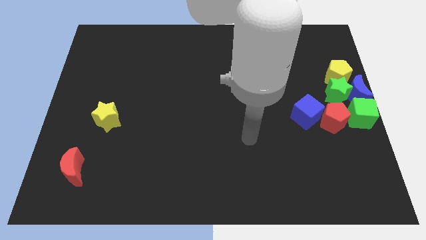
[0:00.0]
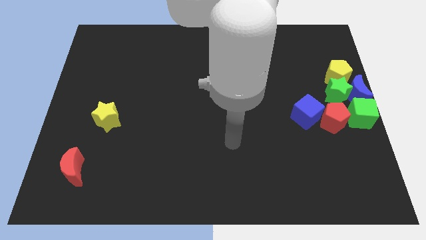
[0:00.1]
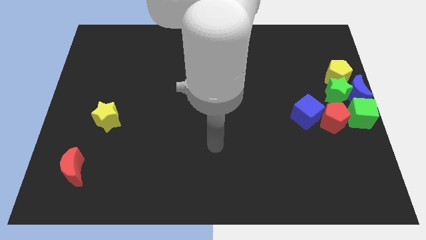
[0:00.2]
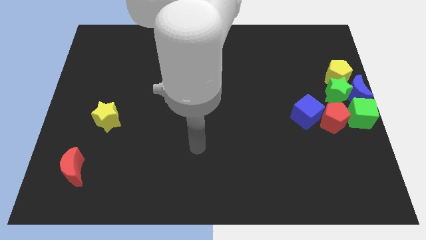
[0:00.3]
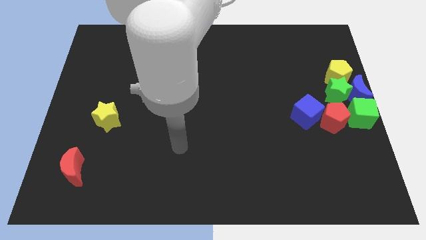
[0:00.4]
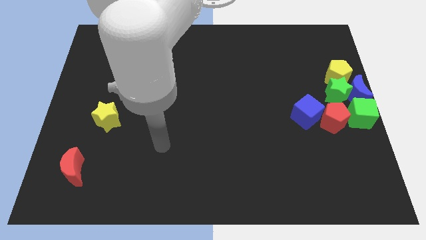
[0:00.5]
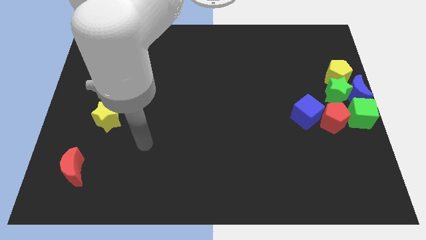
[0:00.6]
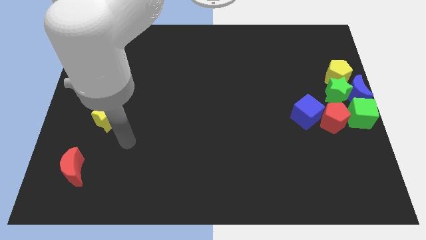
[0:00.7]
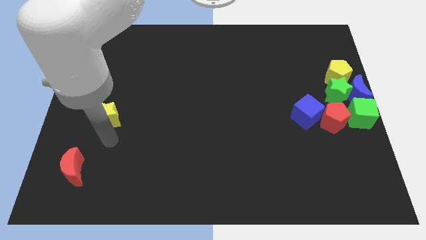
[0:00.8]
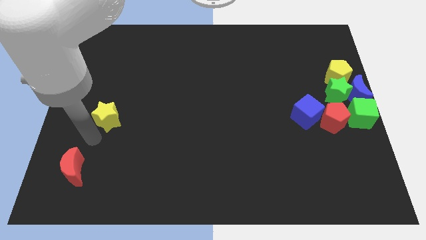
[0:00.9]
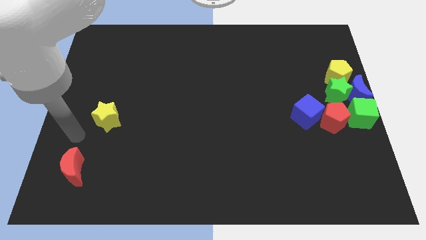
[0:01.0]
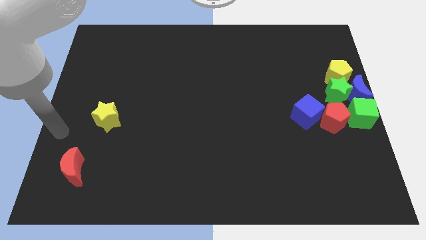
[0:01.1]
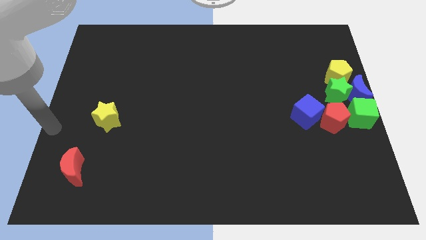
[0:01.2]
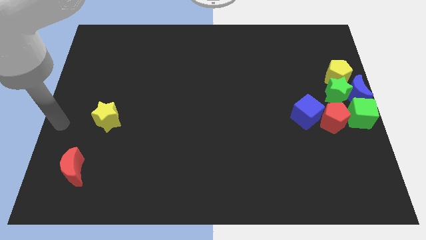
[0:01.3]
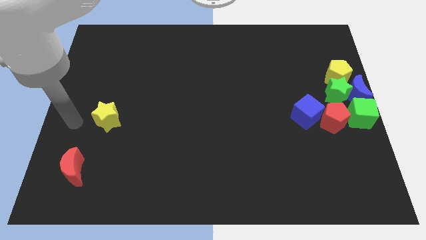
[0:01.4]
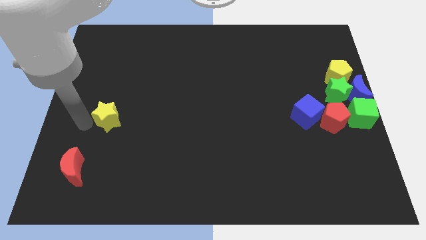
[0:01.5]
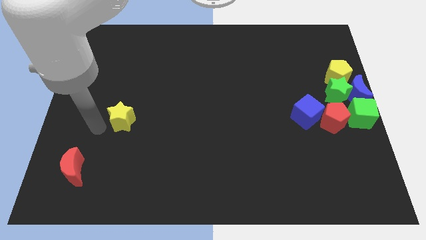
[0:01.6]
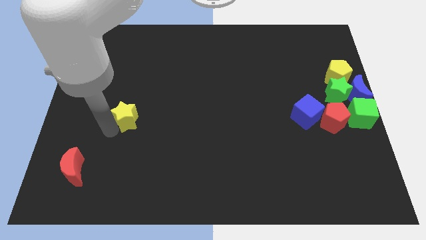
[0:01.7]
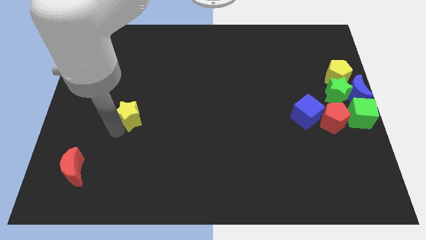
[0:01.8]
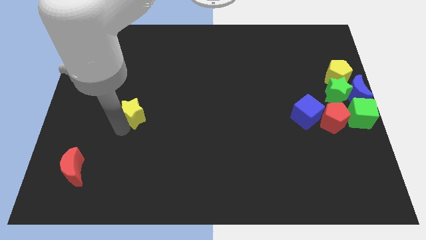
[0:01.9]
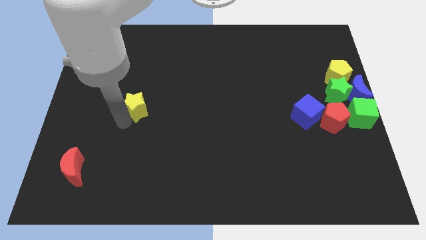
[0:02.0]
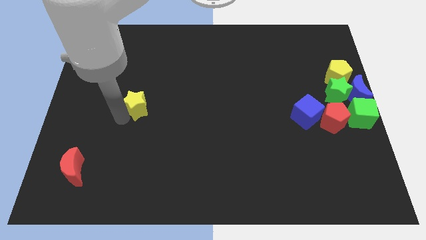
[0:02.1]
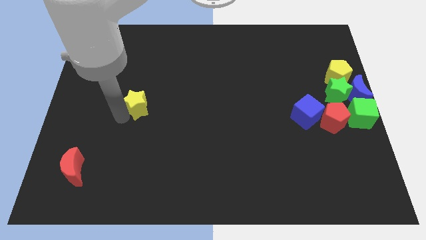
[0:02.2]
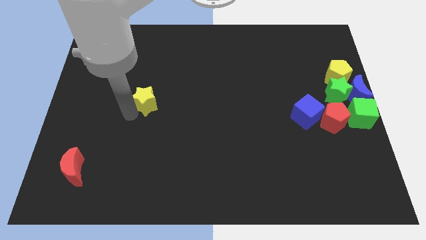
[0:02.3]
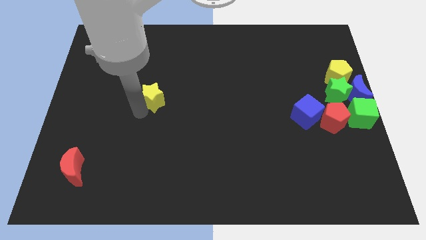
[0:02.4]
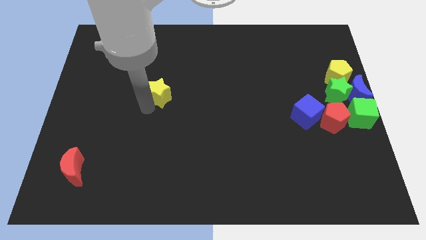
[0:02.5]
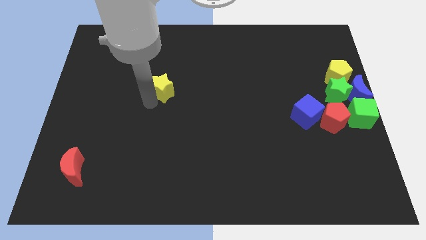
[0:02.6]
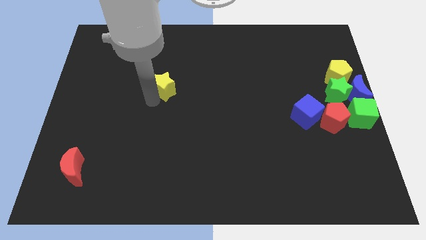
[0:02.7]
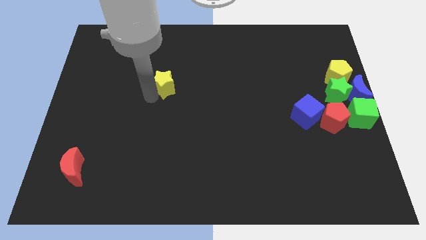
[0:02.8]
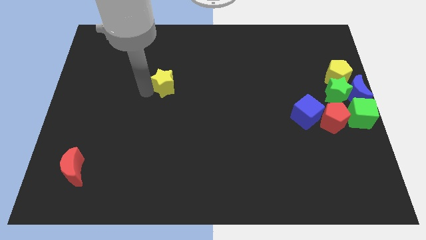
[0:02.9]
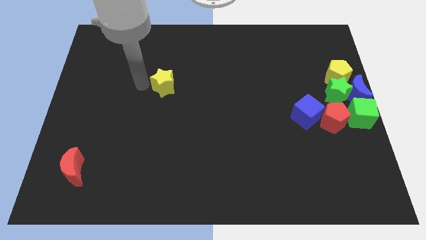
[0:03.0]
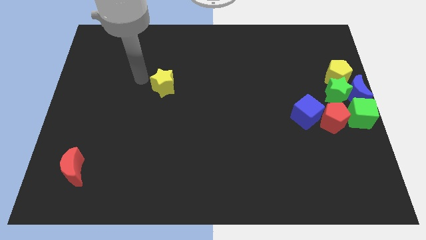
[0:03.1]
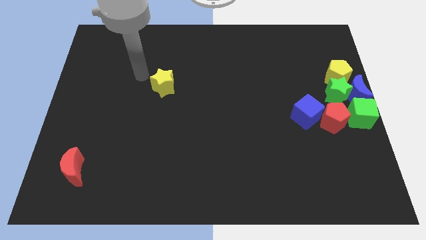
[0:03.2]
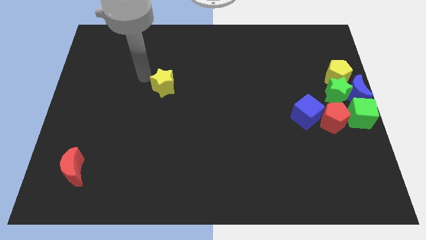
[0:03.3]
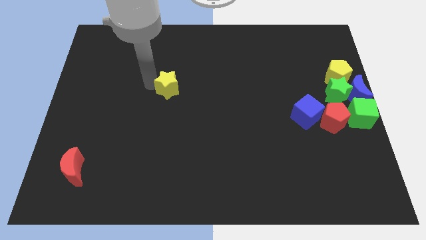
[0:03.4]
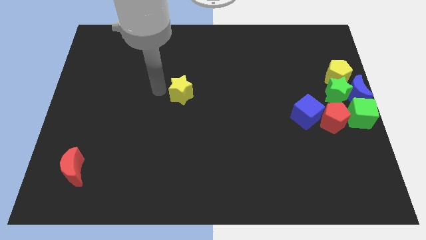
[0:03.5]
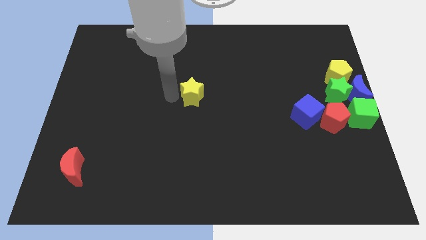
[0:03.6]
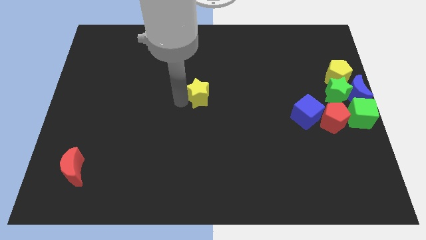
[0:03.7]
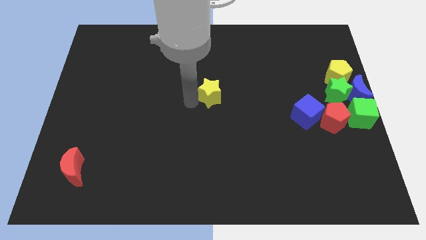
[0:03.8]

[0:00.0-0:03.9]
move the yellow star to the center

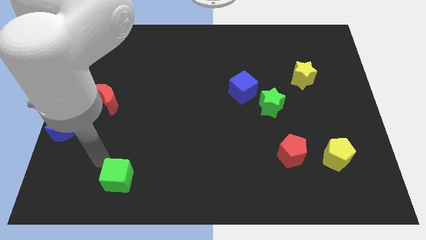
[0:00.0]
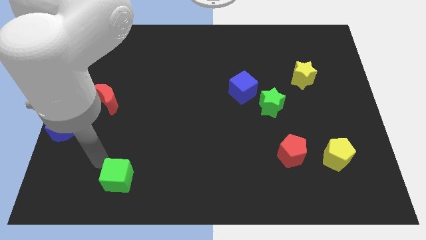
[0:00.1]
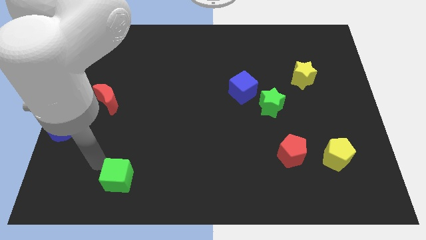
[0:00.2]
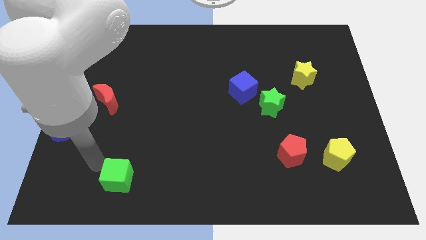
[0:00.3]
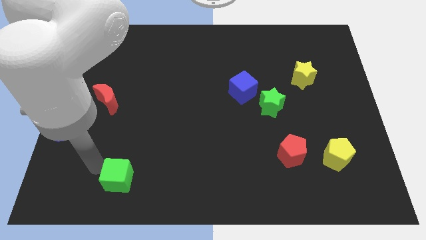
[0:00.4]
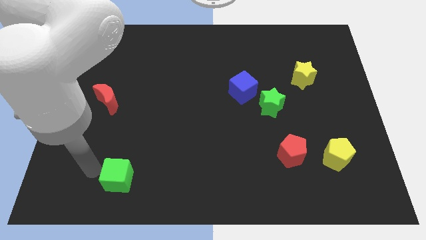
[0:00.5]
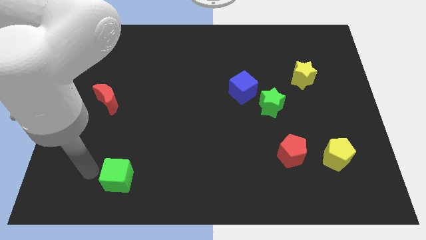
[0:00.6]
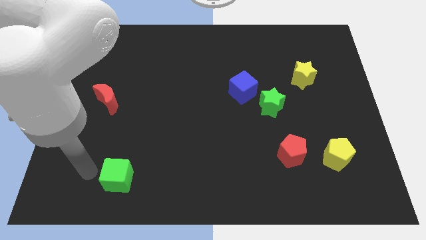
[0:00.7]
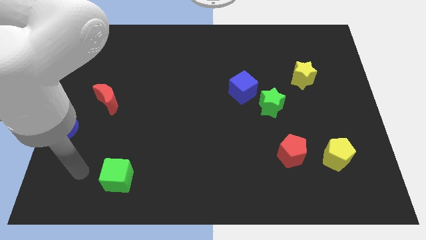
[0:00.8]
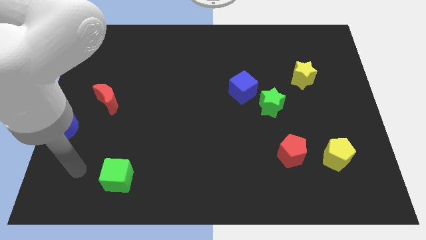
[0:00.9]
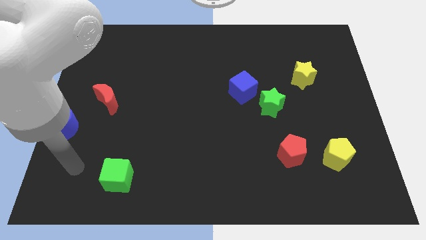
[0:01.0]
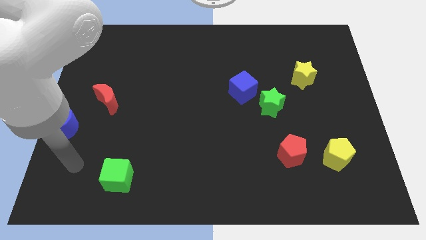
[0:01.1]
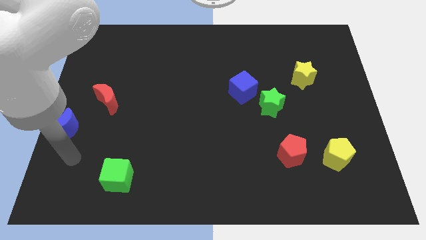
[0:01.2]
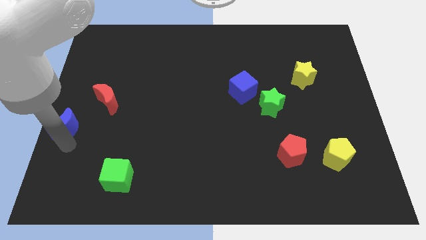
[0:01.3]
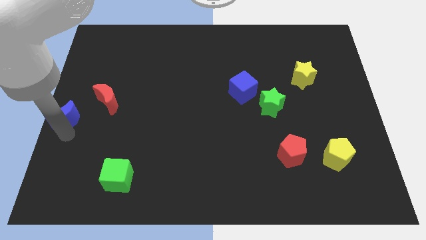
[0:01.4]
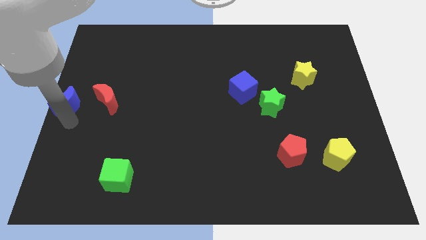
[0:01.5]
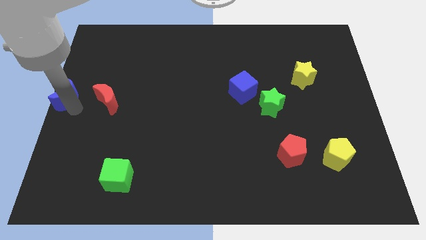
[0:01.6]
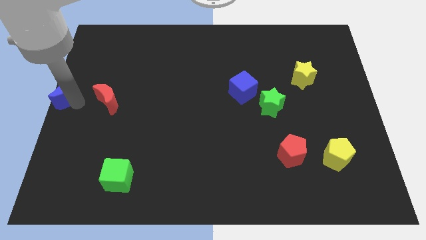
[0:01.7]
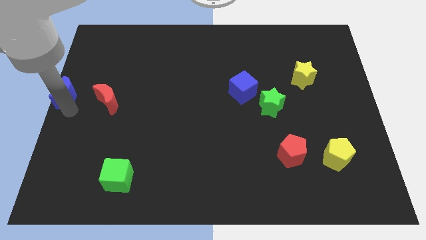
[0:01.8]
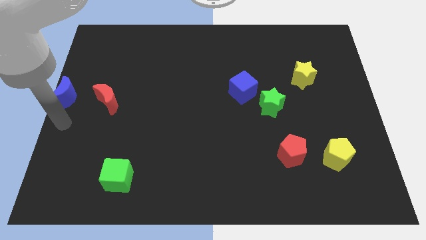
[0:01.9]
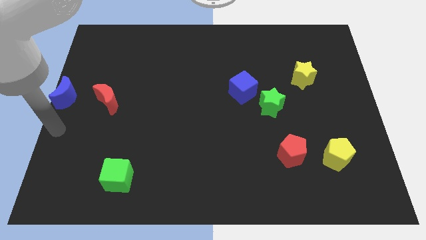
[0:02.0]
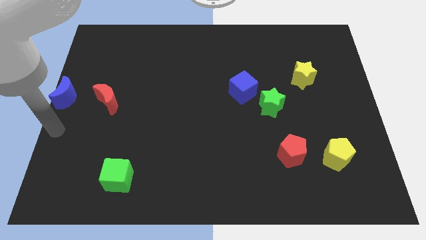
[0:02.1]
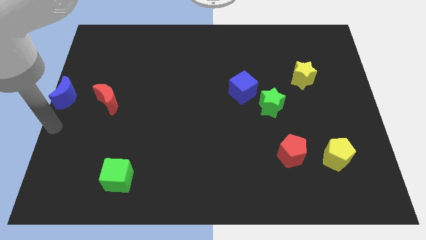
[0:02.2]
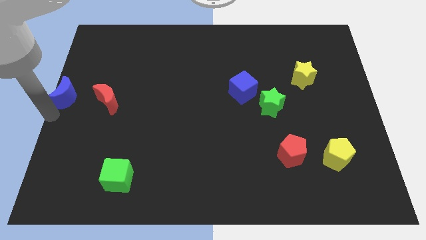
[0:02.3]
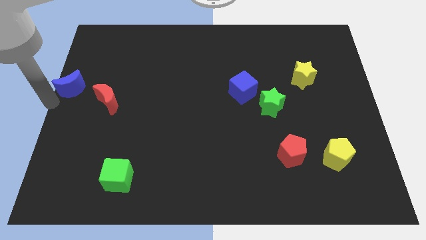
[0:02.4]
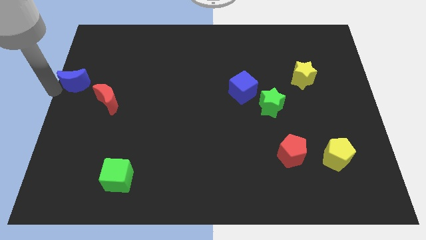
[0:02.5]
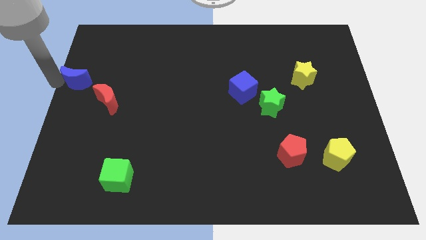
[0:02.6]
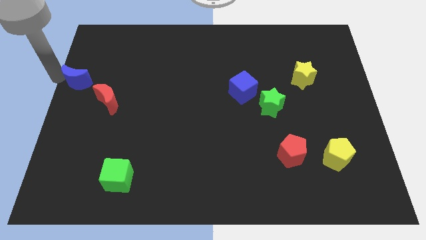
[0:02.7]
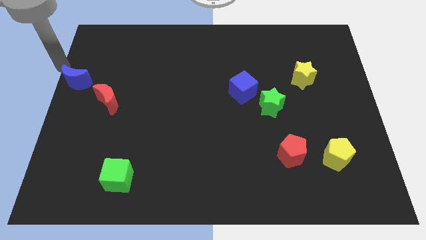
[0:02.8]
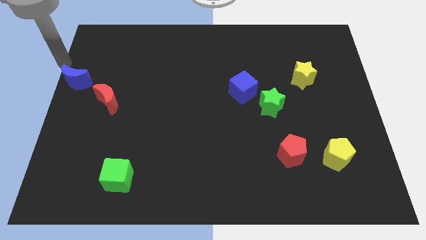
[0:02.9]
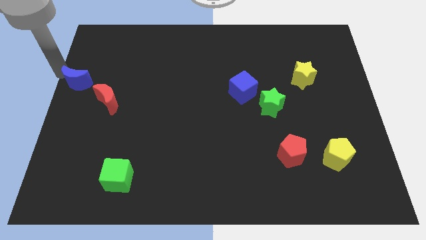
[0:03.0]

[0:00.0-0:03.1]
place blue moon to the top left of red moon

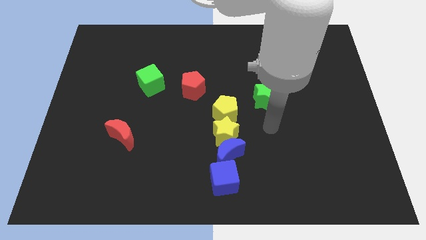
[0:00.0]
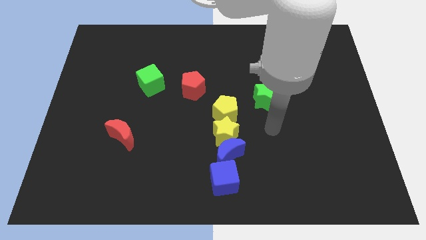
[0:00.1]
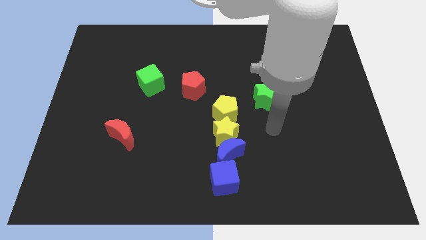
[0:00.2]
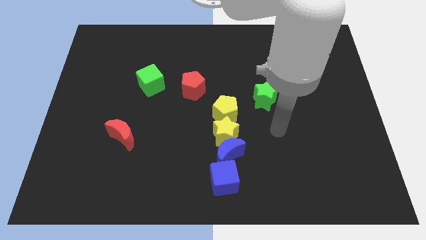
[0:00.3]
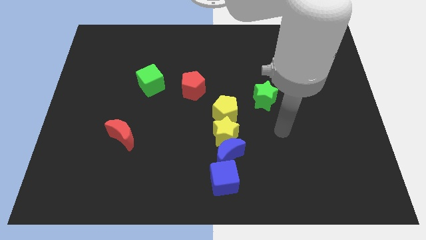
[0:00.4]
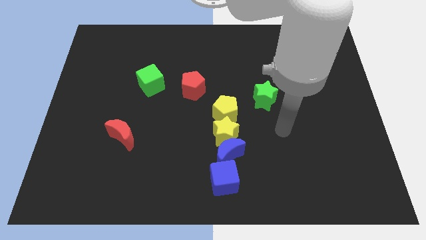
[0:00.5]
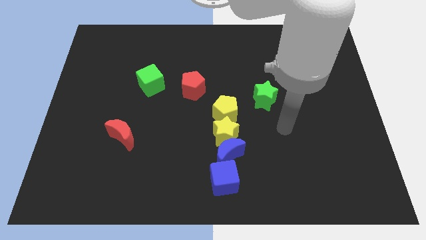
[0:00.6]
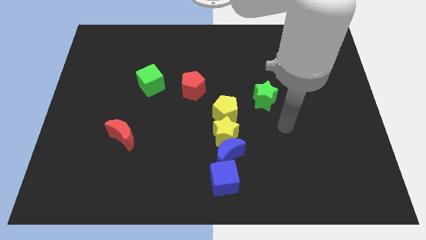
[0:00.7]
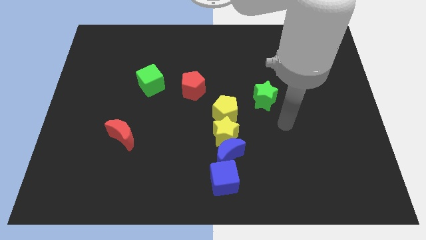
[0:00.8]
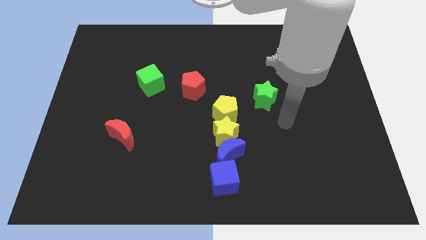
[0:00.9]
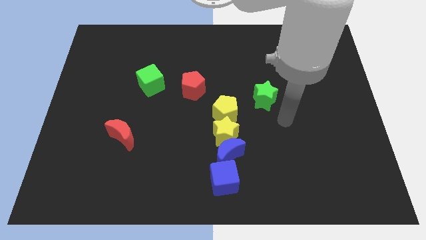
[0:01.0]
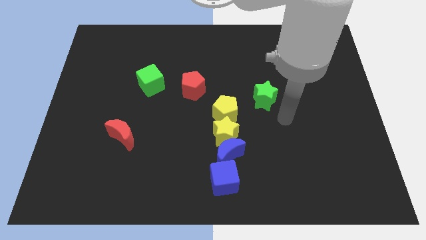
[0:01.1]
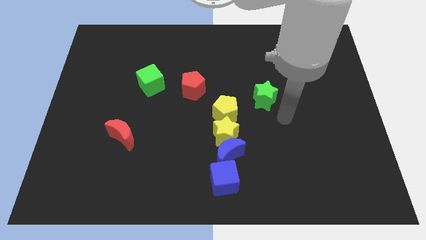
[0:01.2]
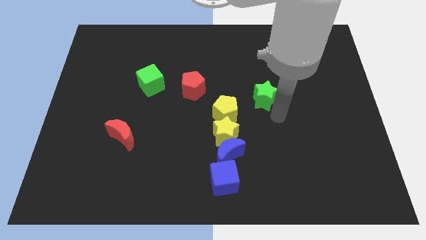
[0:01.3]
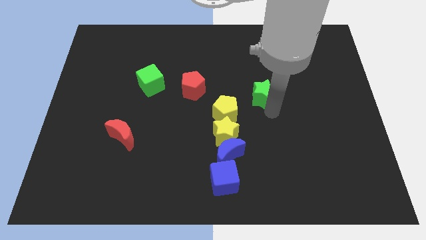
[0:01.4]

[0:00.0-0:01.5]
move your arm to the right of the green star

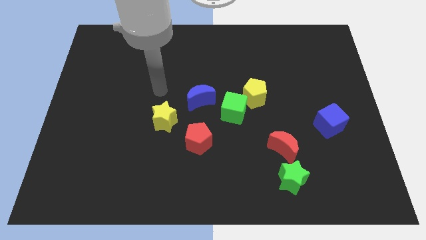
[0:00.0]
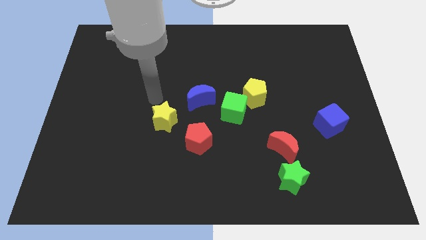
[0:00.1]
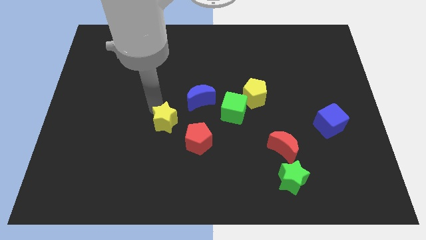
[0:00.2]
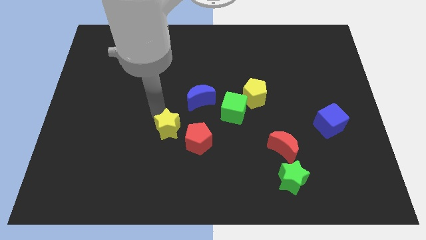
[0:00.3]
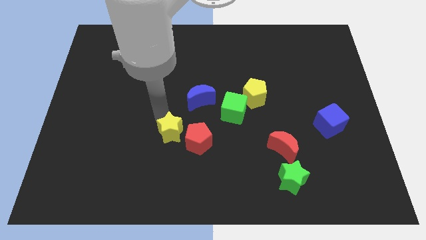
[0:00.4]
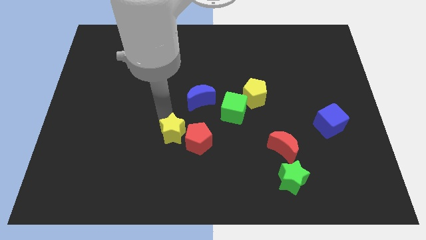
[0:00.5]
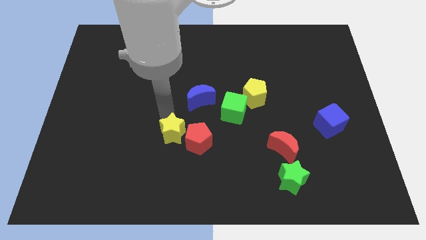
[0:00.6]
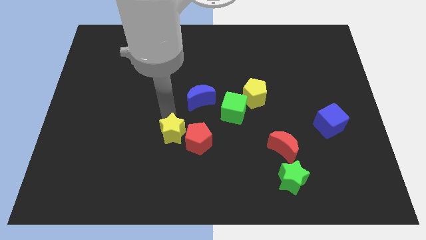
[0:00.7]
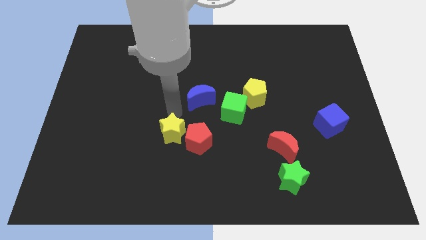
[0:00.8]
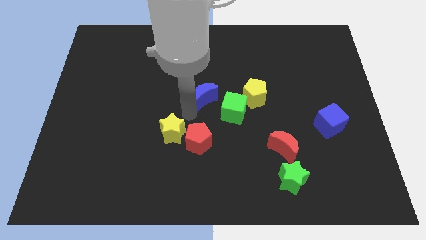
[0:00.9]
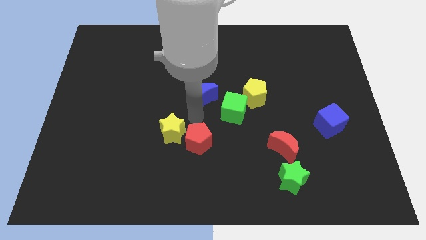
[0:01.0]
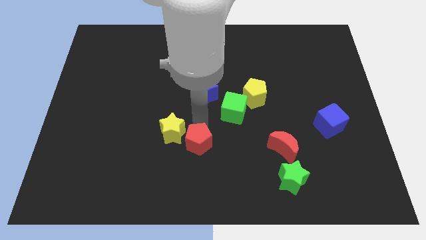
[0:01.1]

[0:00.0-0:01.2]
push the yellow star into the red pentagon
